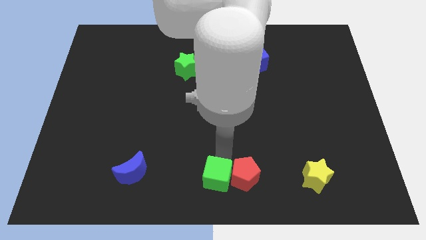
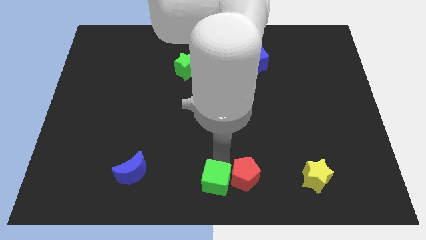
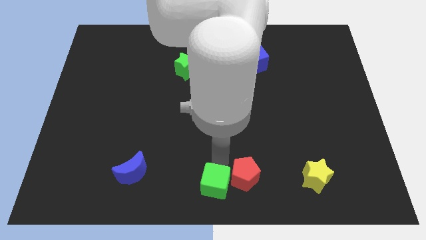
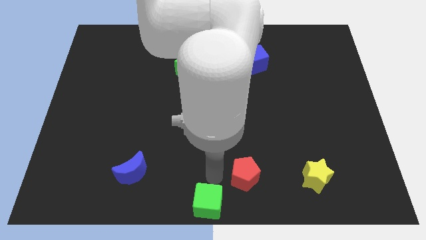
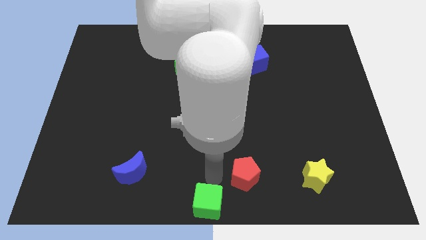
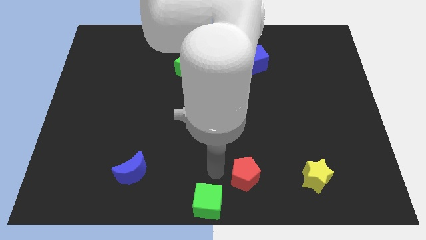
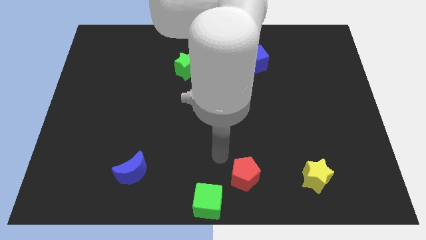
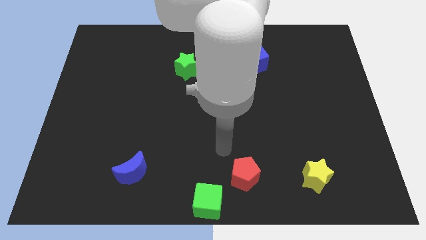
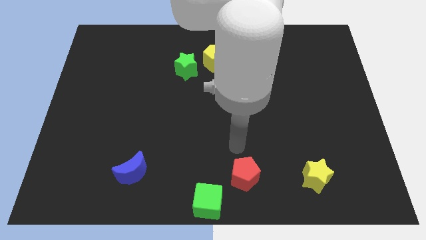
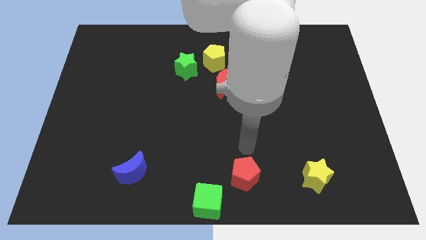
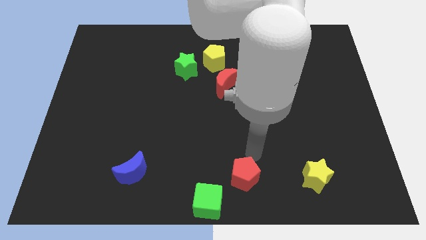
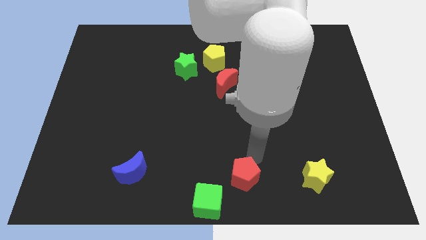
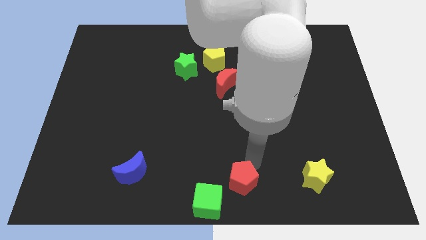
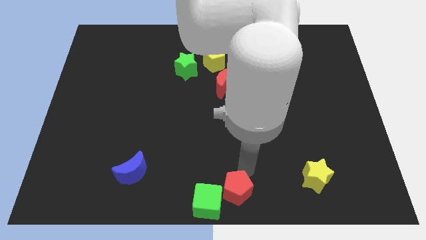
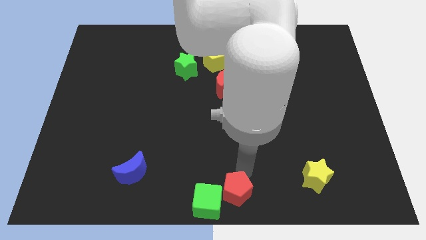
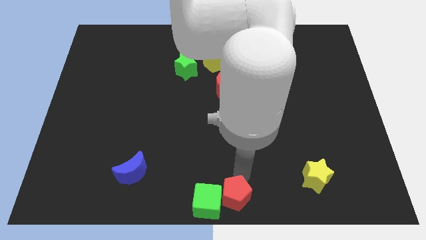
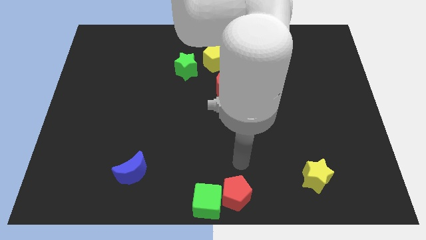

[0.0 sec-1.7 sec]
push green cube towards bottom center

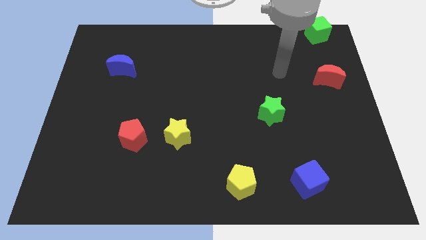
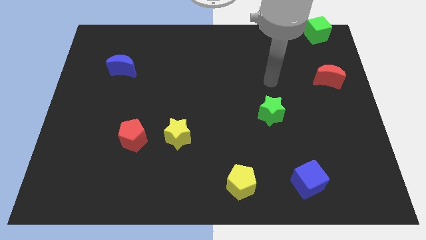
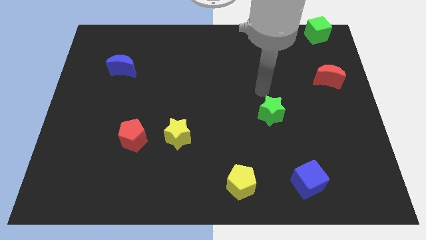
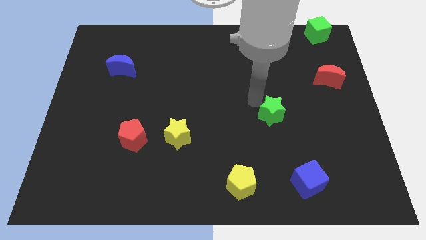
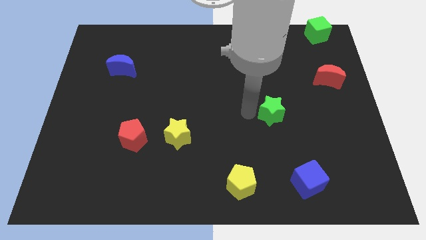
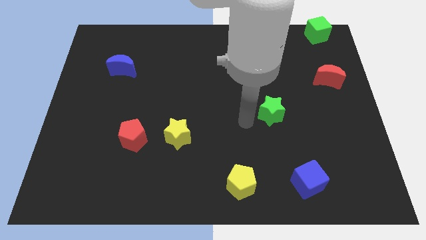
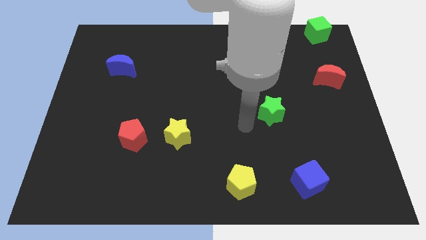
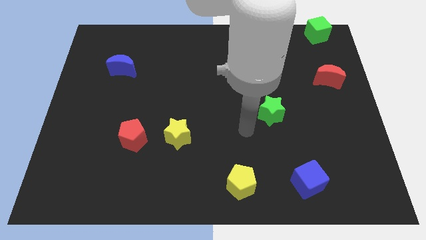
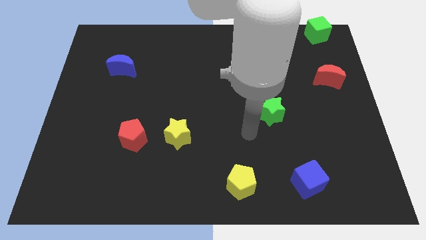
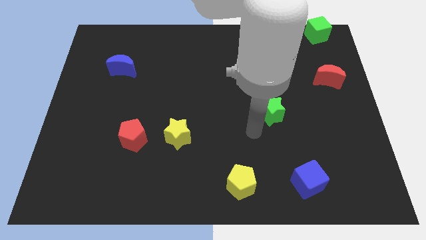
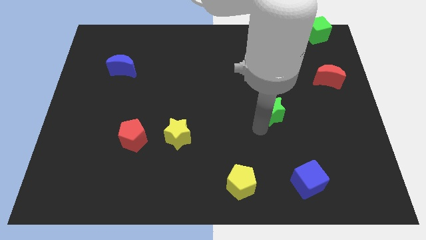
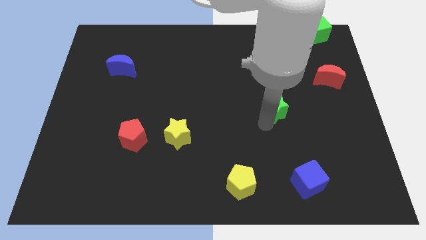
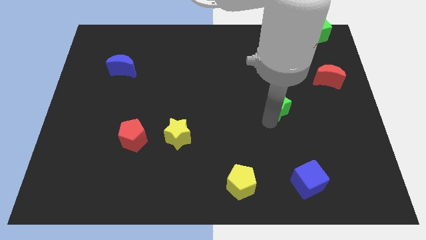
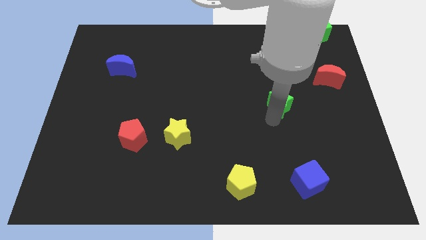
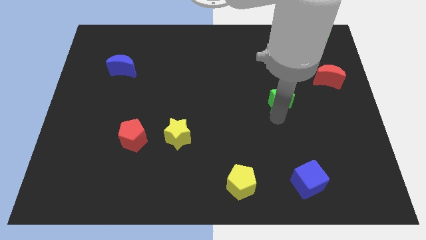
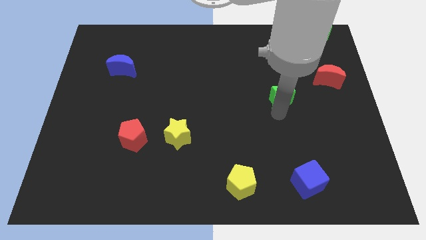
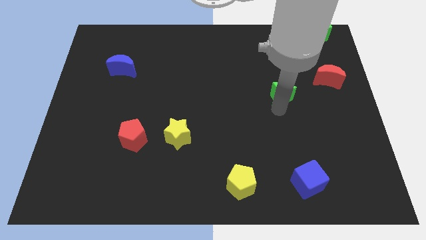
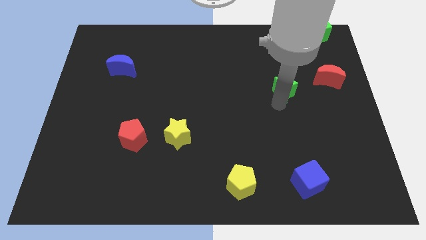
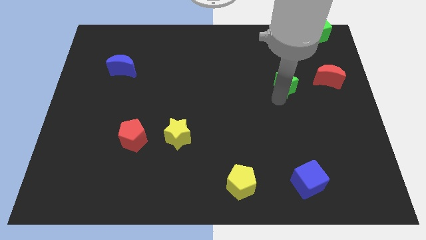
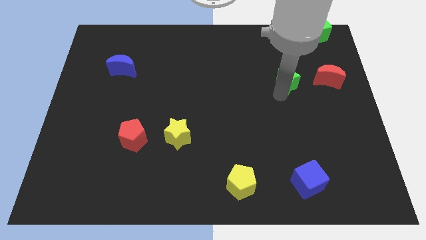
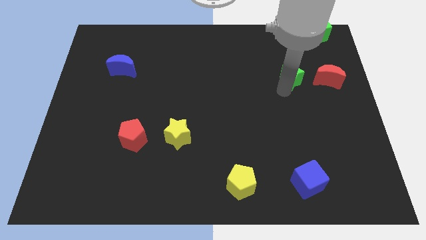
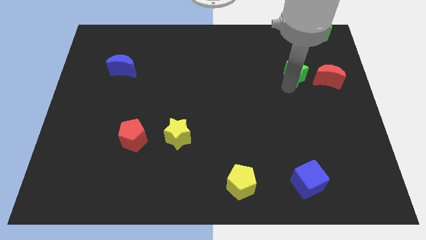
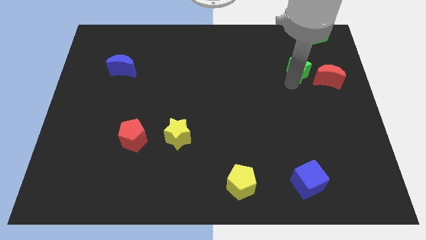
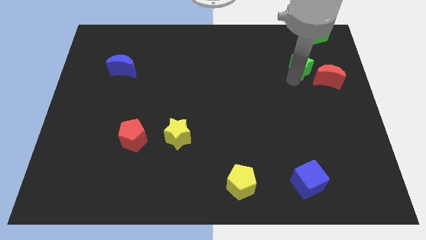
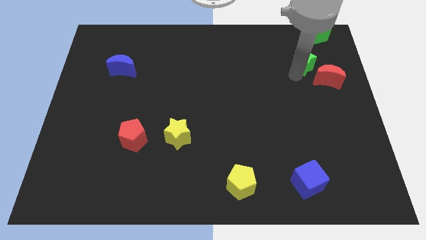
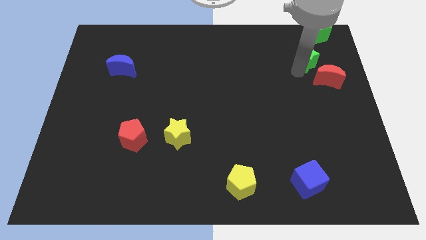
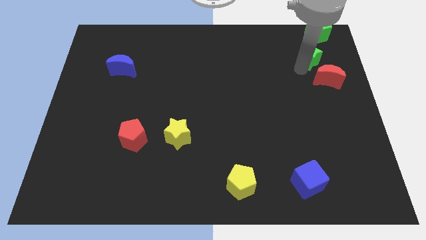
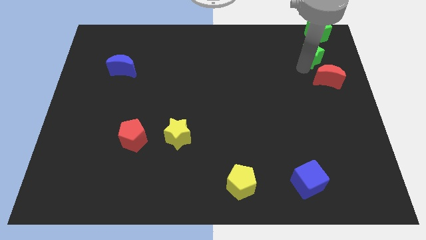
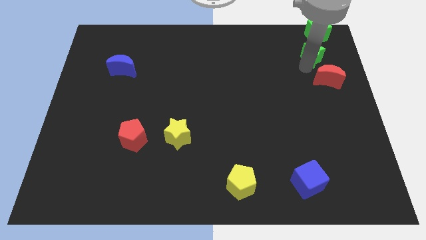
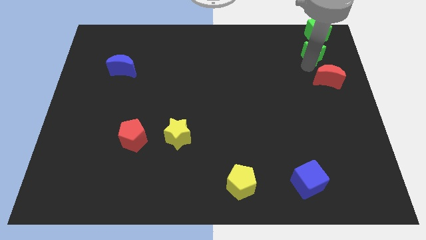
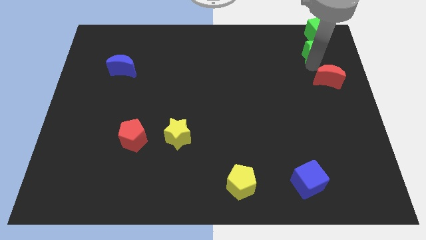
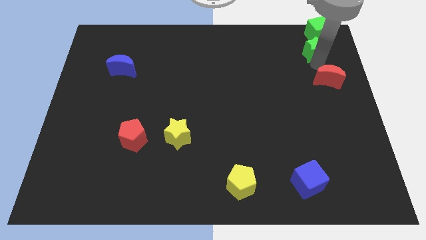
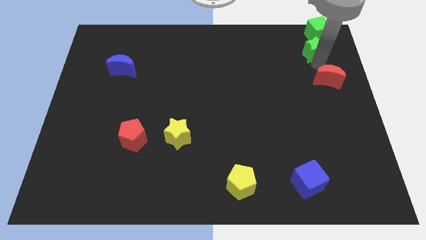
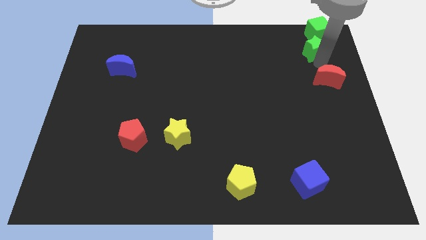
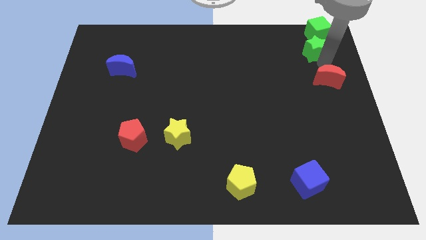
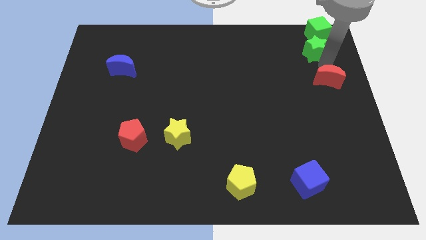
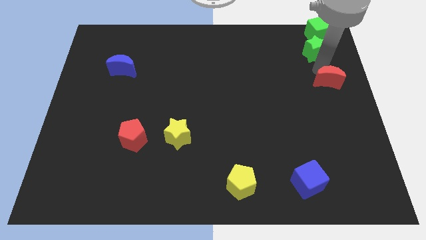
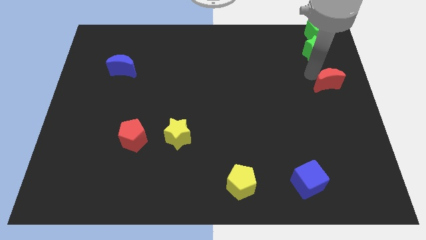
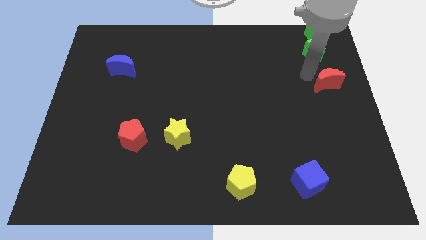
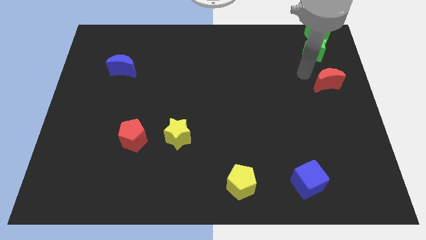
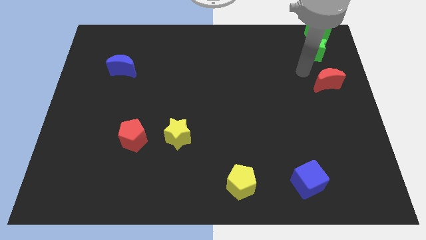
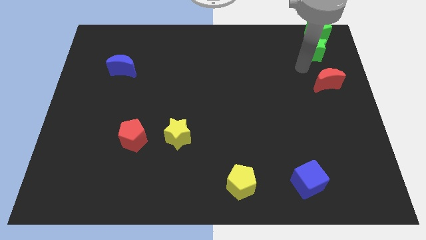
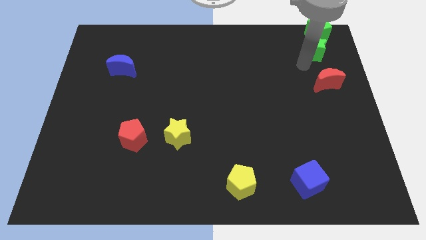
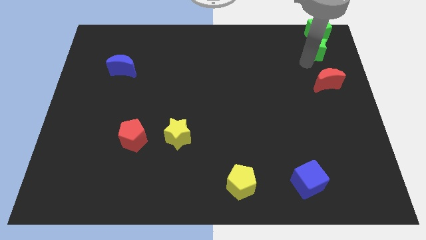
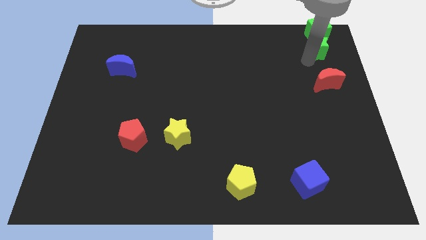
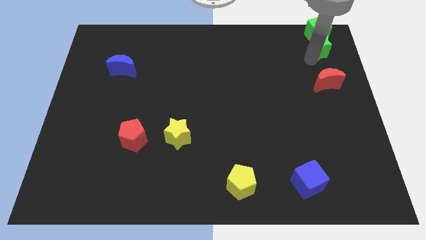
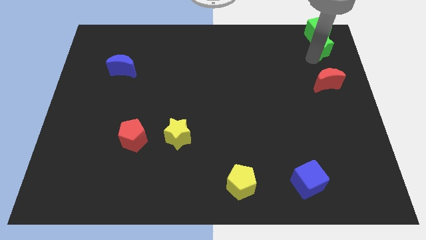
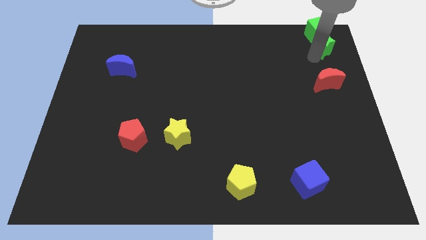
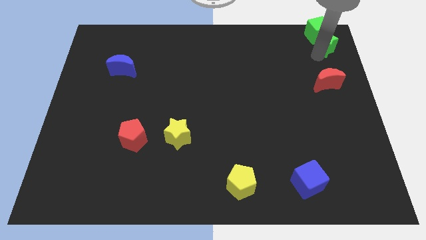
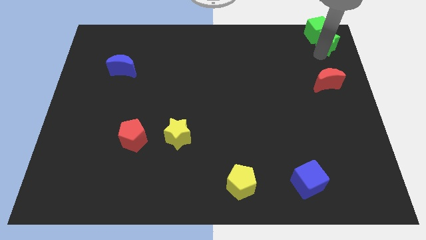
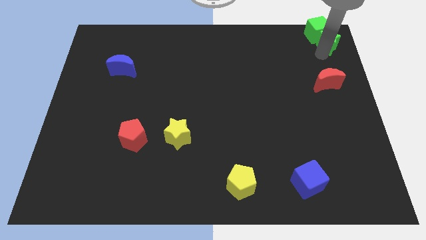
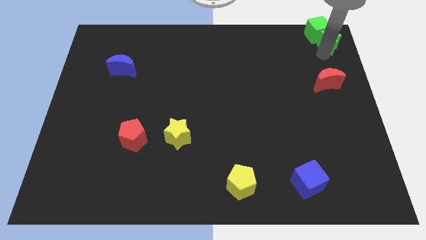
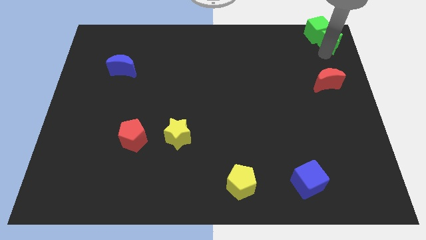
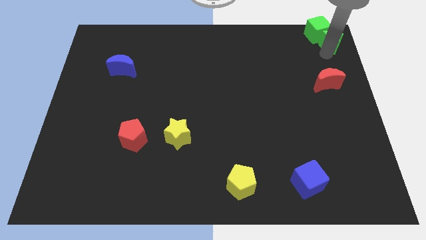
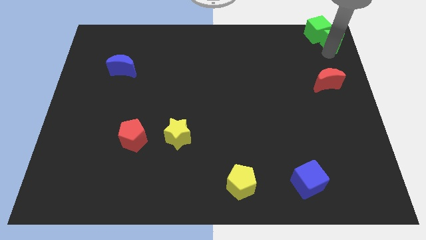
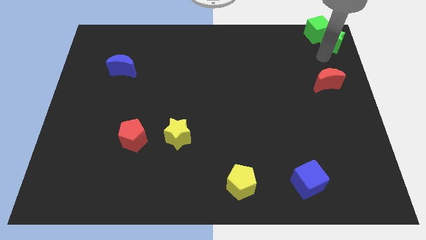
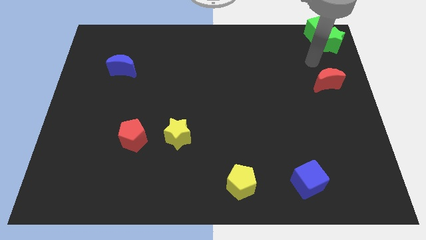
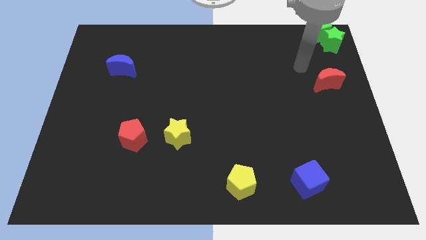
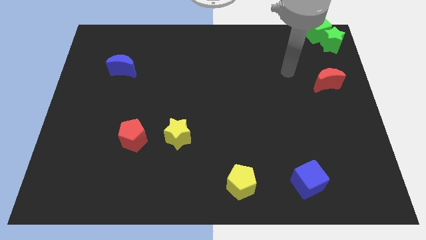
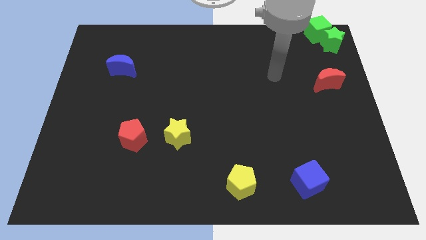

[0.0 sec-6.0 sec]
place the green star beside the green cube right top of board

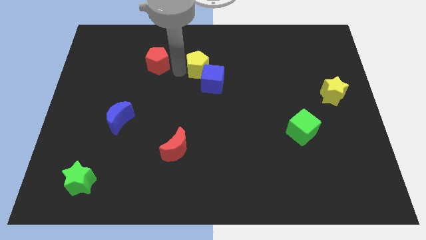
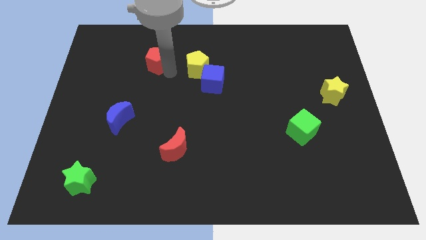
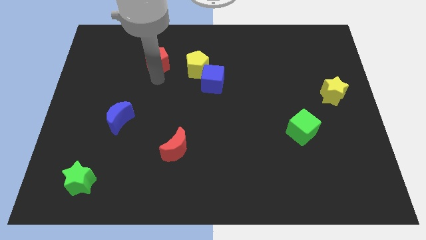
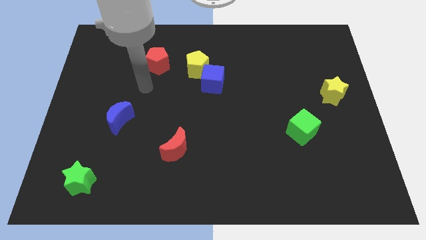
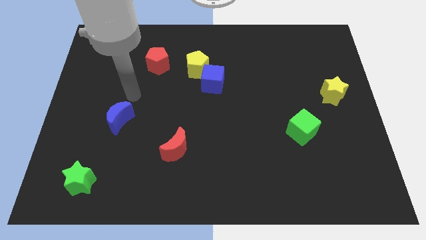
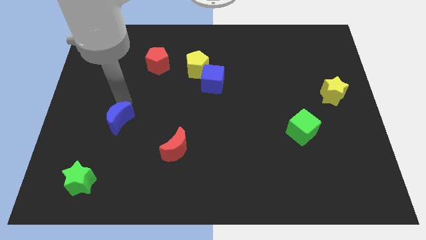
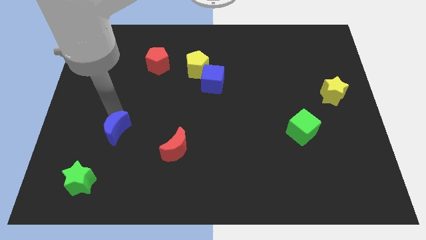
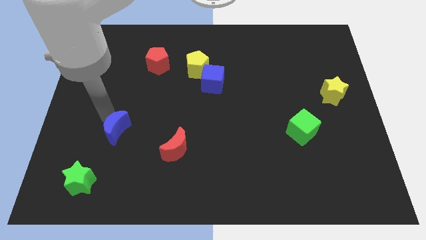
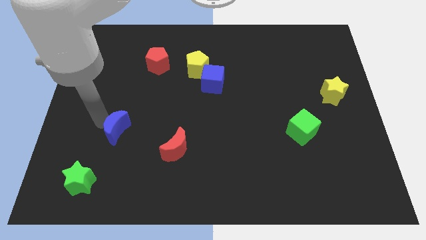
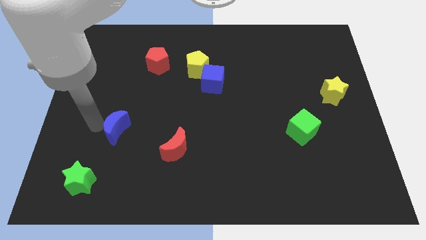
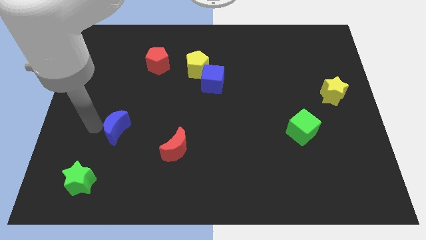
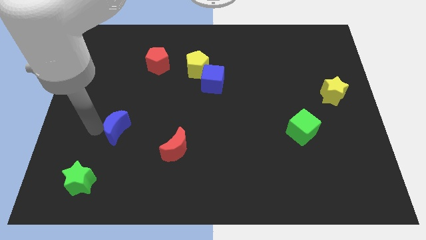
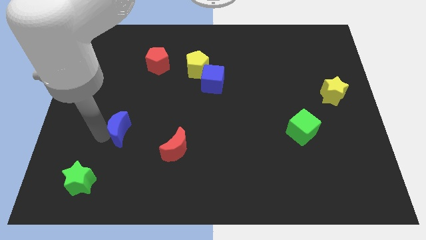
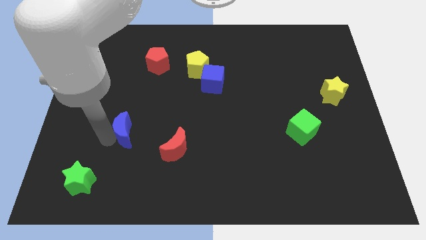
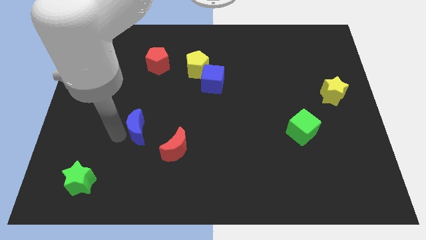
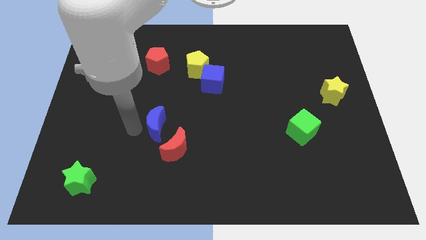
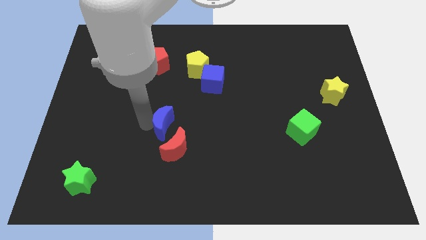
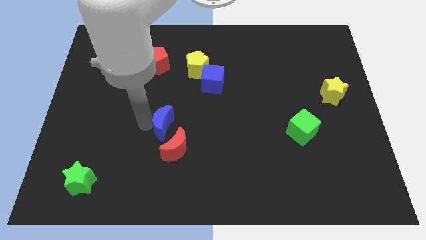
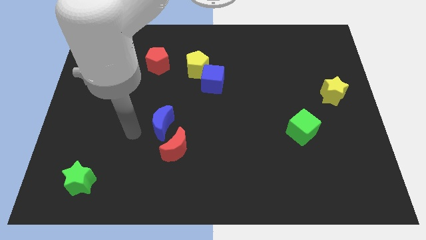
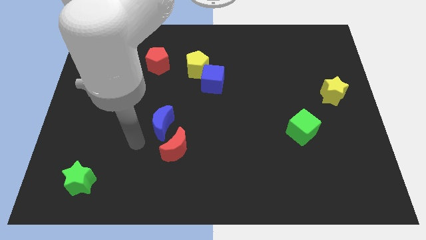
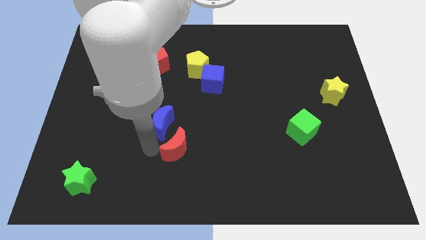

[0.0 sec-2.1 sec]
slide blue moon towards red moon
